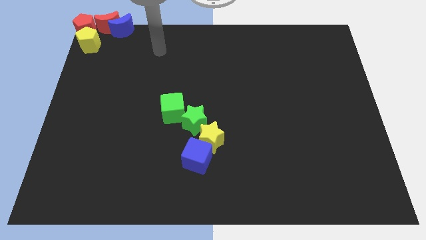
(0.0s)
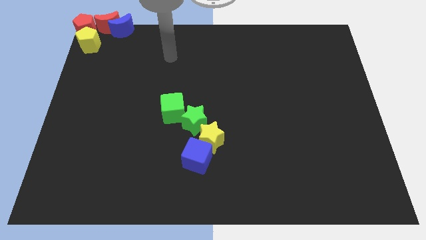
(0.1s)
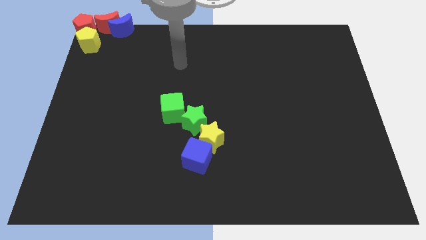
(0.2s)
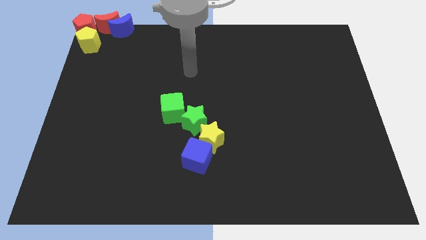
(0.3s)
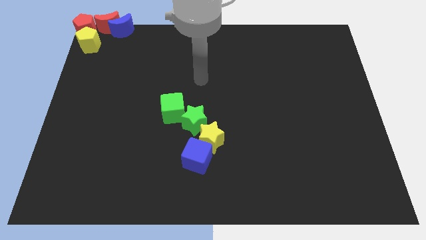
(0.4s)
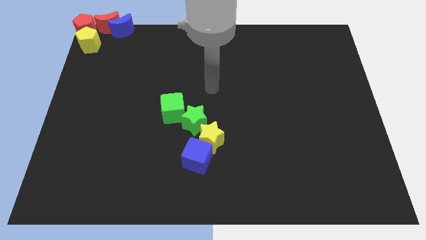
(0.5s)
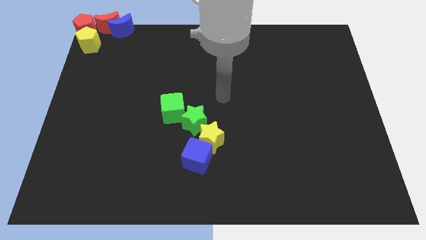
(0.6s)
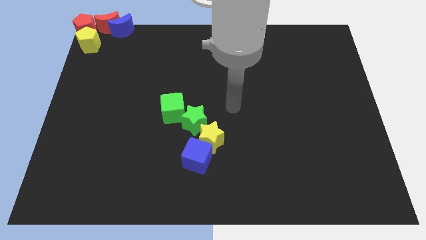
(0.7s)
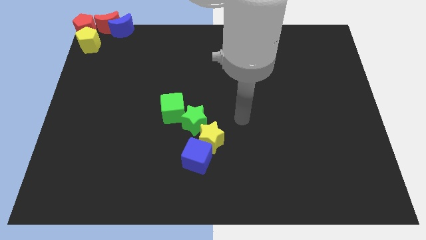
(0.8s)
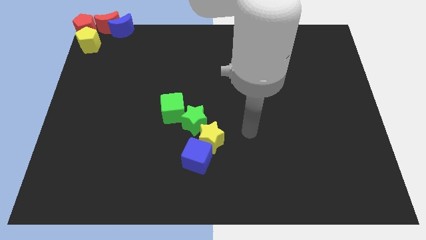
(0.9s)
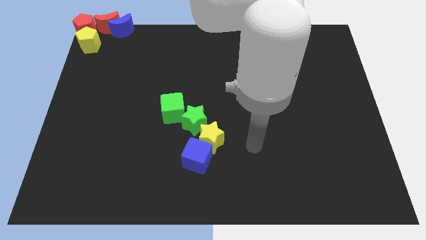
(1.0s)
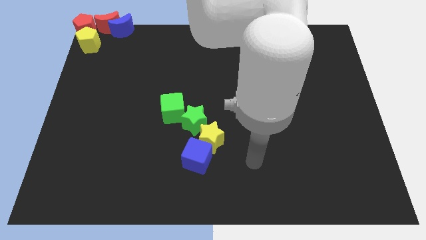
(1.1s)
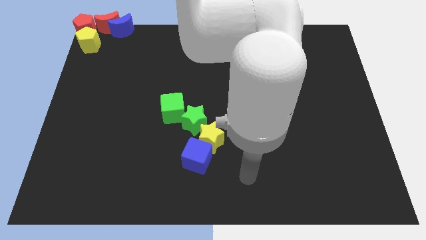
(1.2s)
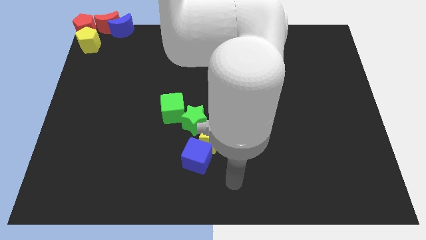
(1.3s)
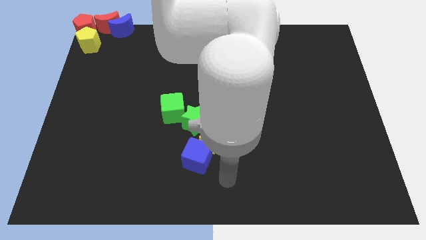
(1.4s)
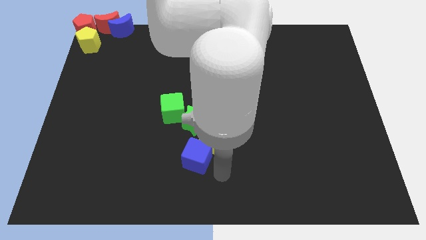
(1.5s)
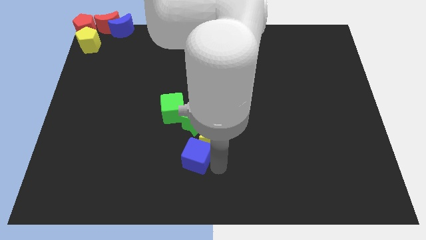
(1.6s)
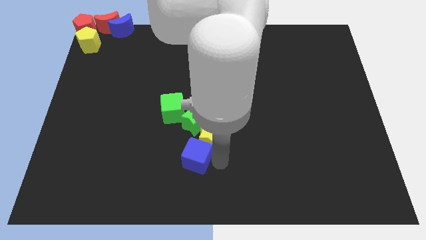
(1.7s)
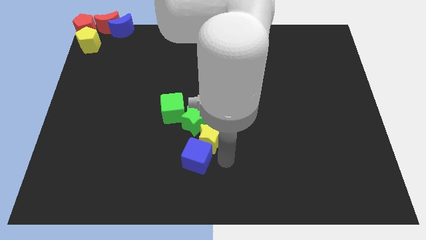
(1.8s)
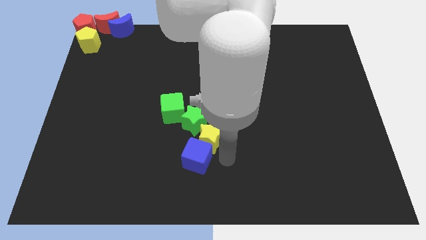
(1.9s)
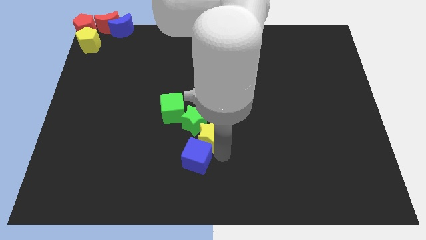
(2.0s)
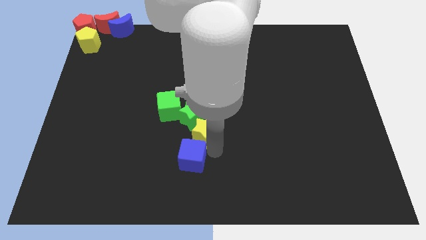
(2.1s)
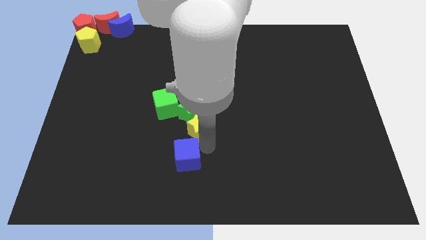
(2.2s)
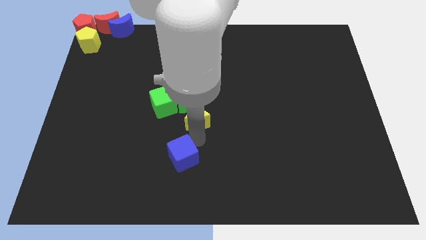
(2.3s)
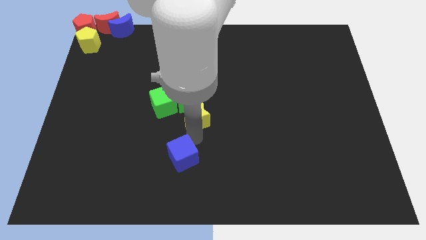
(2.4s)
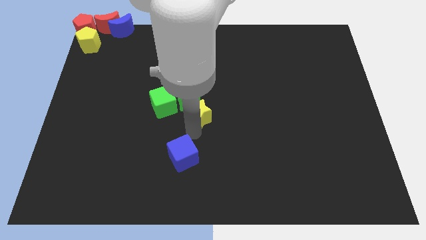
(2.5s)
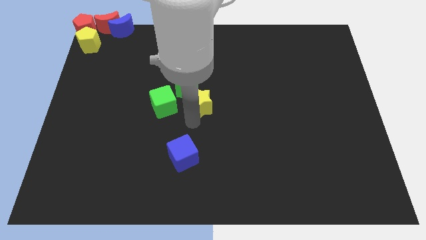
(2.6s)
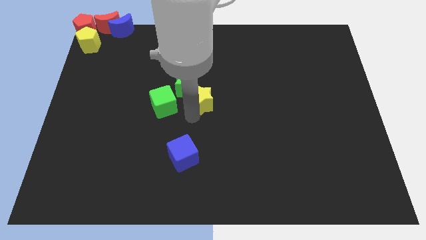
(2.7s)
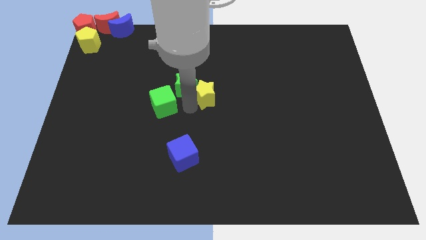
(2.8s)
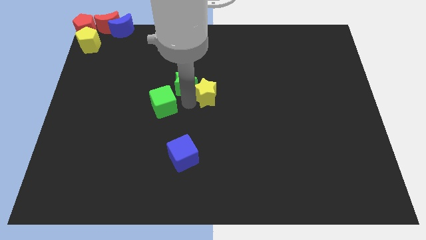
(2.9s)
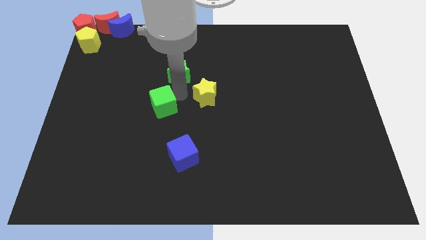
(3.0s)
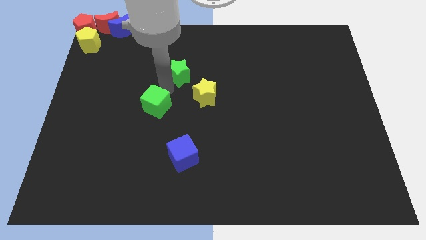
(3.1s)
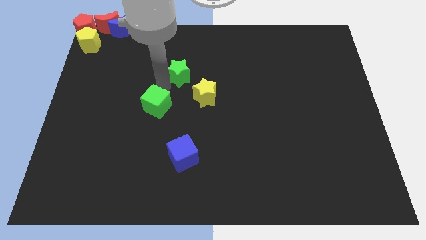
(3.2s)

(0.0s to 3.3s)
separate the group of blocks

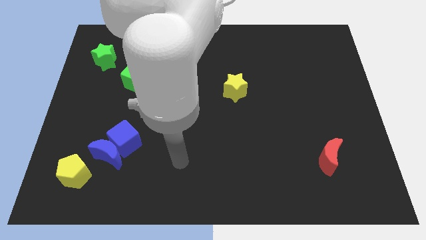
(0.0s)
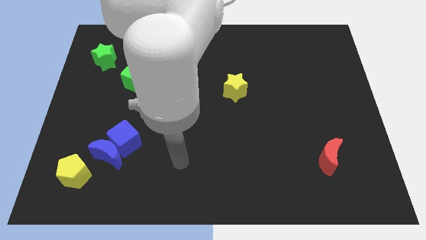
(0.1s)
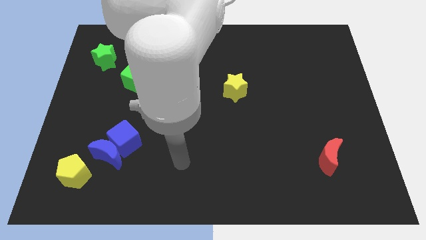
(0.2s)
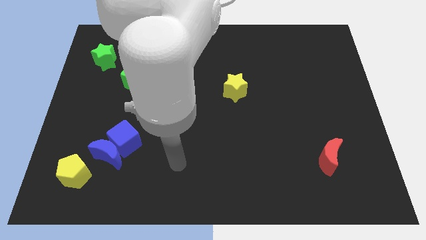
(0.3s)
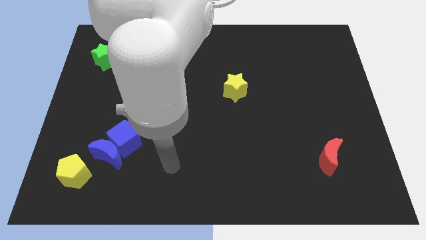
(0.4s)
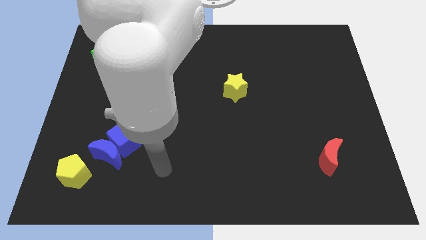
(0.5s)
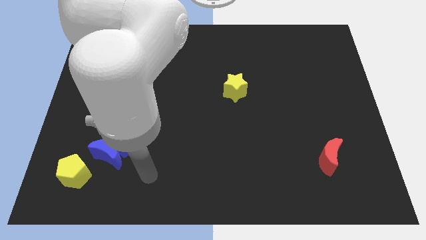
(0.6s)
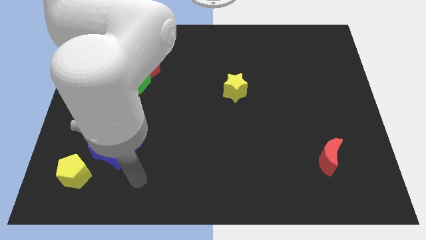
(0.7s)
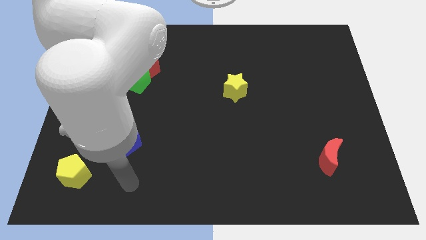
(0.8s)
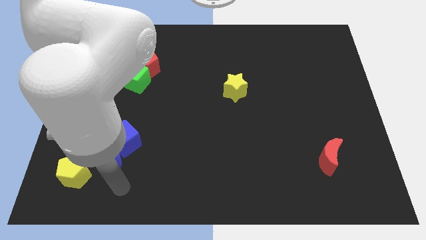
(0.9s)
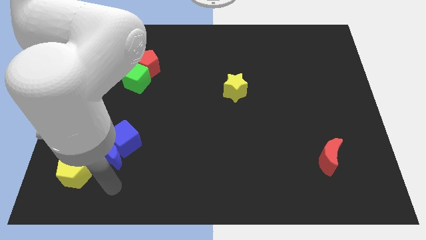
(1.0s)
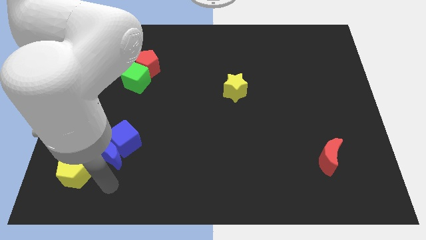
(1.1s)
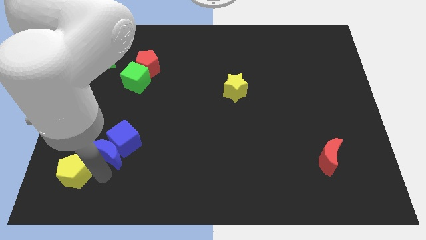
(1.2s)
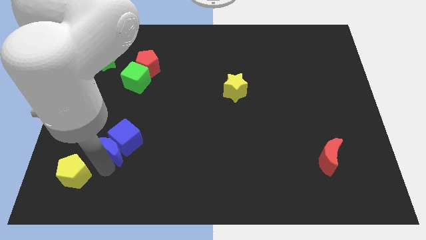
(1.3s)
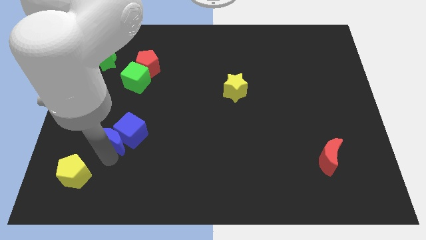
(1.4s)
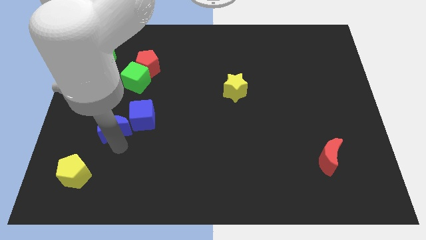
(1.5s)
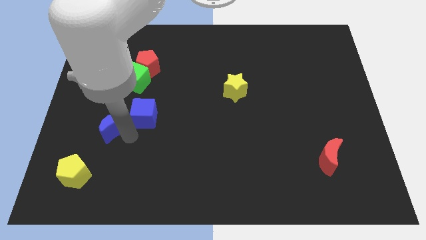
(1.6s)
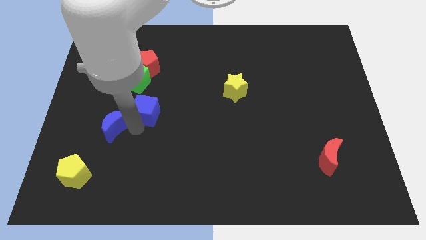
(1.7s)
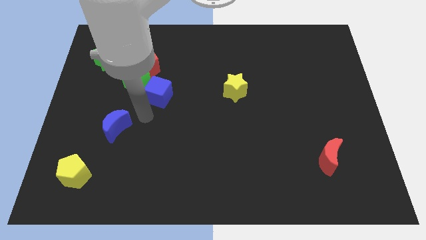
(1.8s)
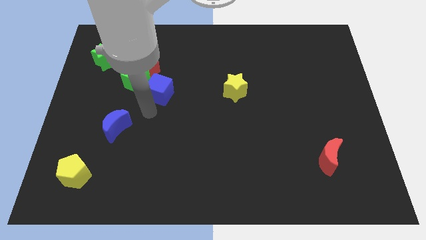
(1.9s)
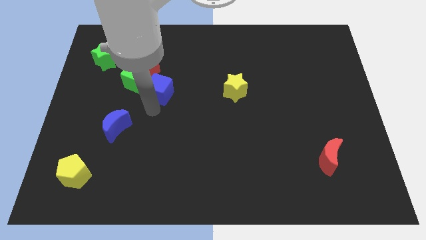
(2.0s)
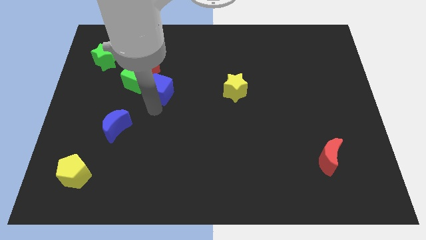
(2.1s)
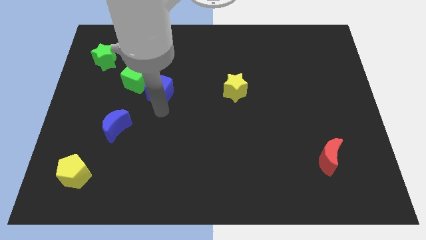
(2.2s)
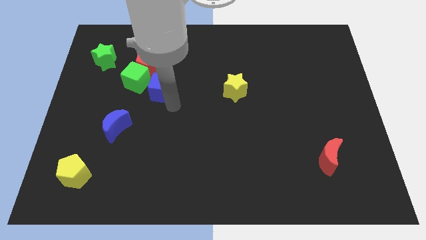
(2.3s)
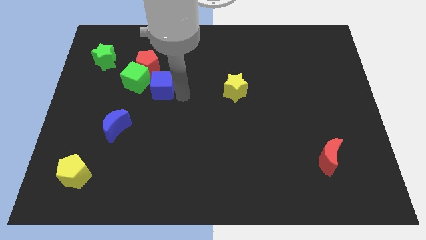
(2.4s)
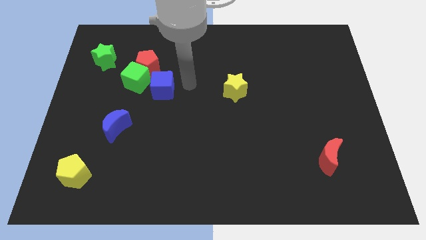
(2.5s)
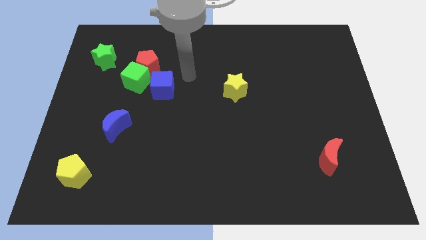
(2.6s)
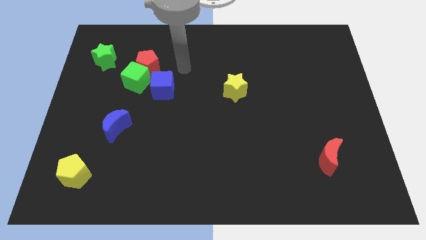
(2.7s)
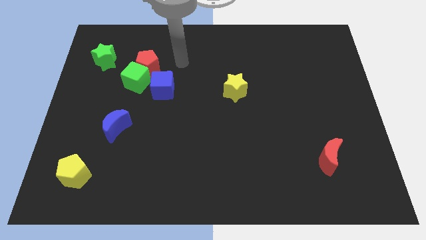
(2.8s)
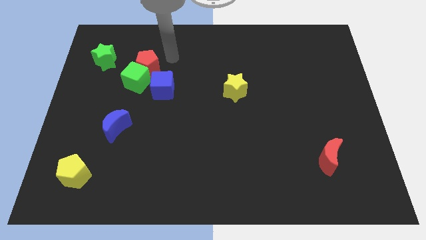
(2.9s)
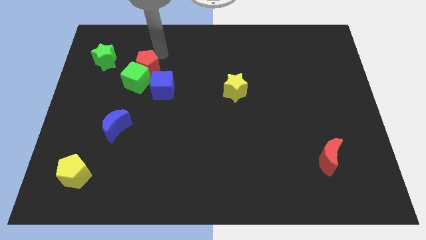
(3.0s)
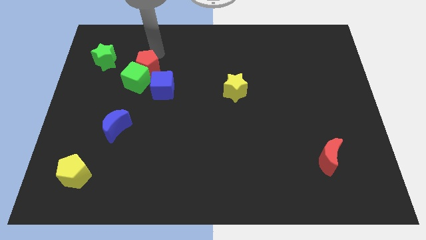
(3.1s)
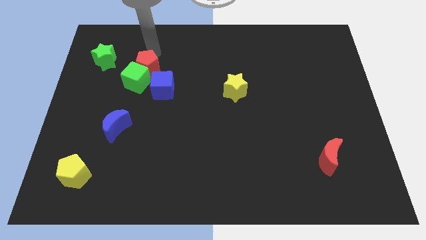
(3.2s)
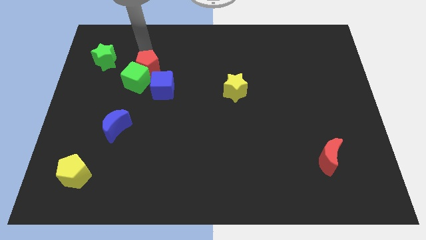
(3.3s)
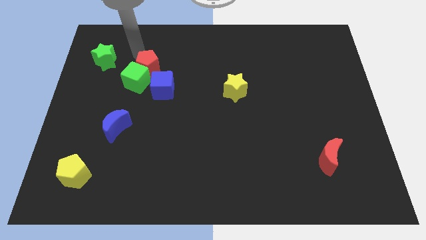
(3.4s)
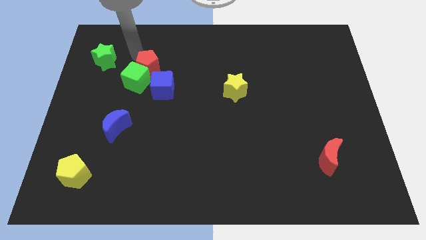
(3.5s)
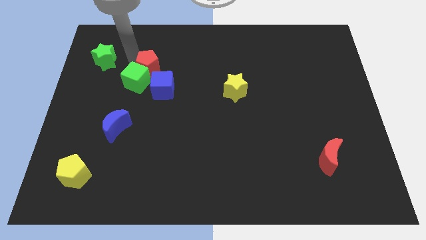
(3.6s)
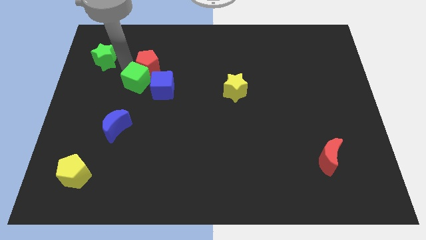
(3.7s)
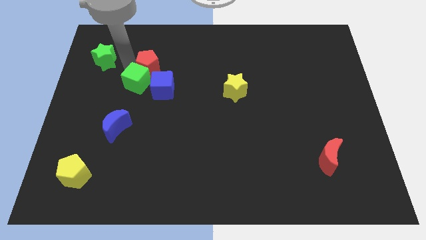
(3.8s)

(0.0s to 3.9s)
move the blue cube near to the blocks

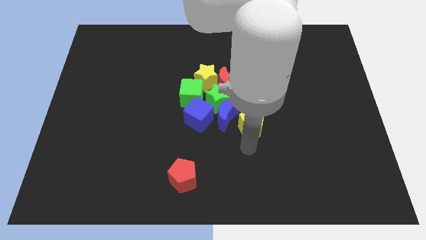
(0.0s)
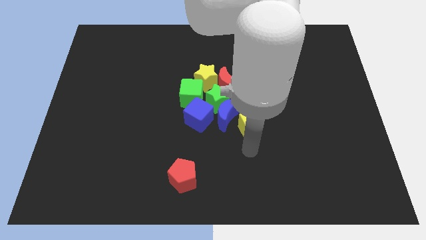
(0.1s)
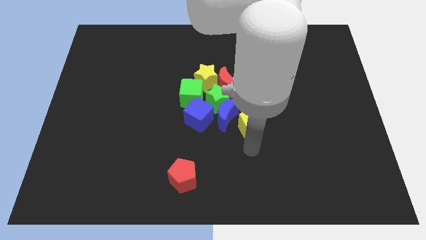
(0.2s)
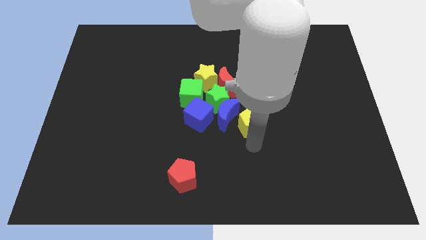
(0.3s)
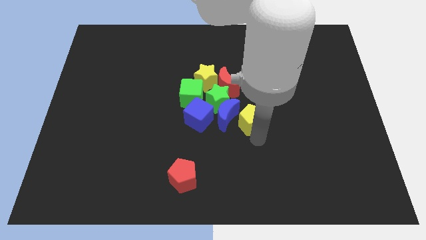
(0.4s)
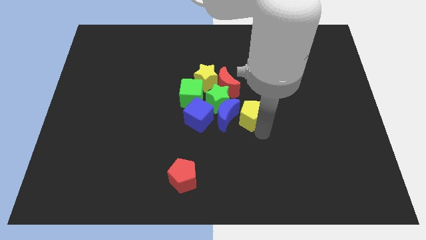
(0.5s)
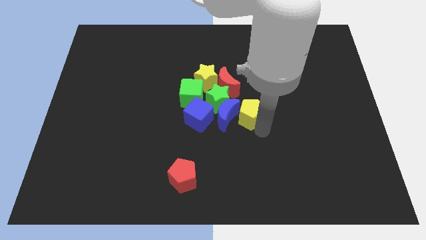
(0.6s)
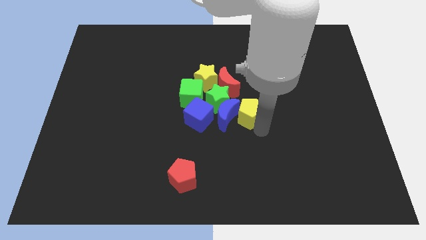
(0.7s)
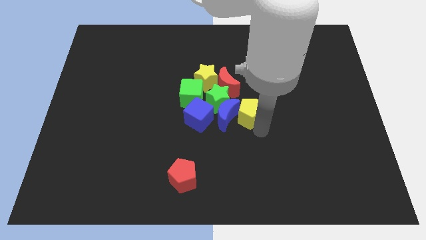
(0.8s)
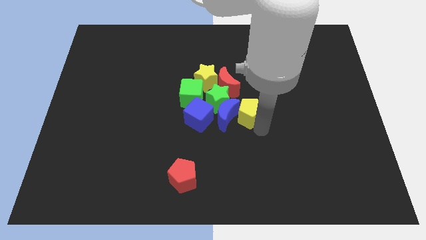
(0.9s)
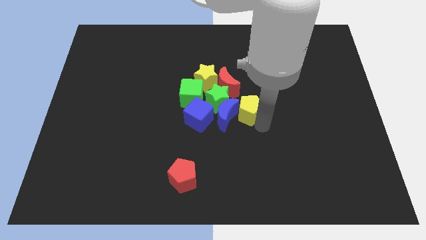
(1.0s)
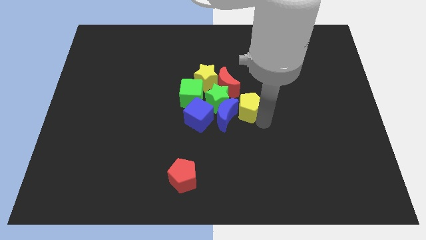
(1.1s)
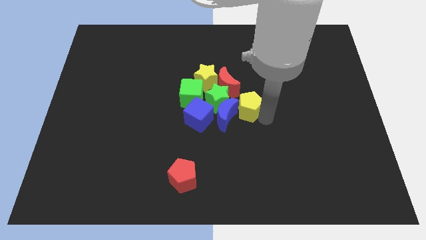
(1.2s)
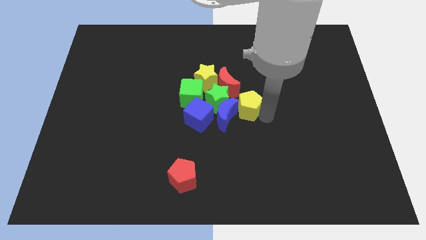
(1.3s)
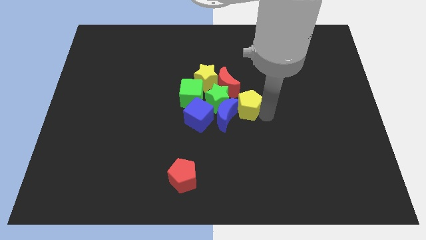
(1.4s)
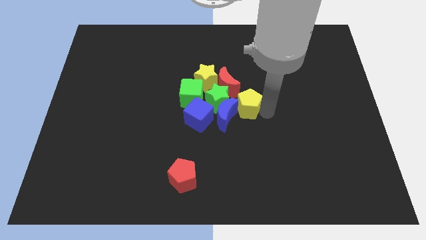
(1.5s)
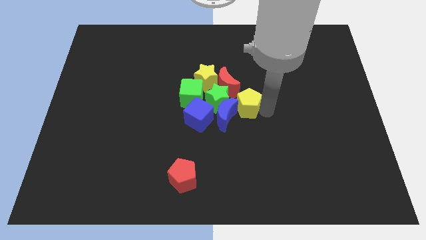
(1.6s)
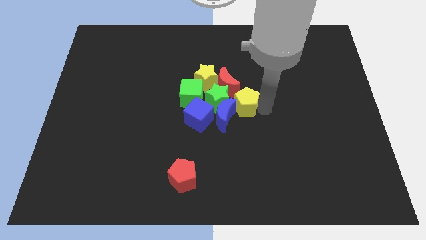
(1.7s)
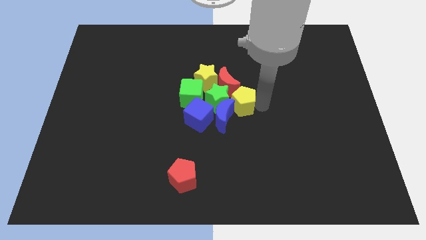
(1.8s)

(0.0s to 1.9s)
push yellow pentagon into the group of blocks
